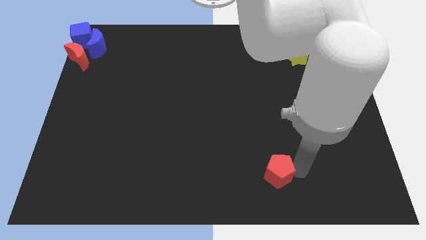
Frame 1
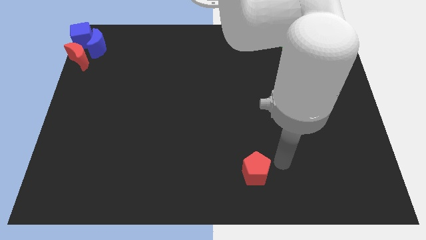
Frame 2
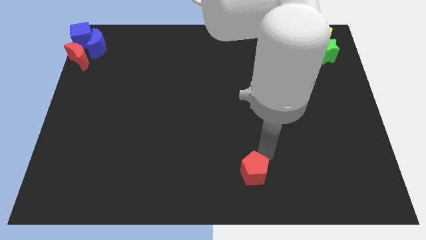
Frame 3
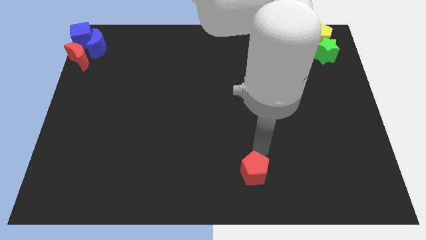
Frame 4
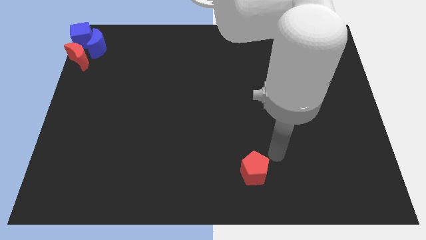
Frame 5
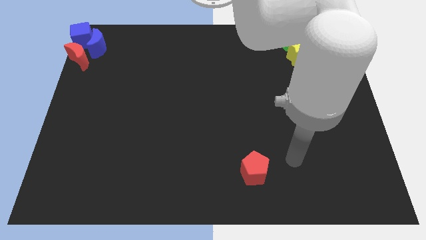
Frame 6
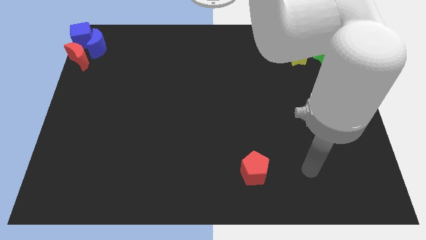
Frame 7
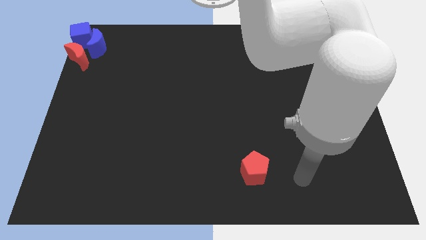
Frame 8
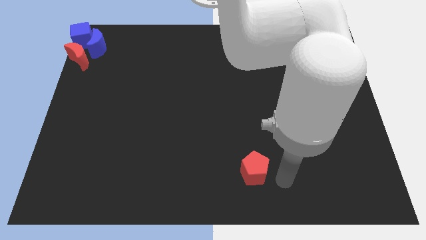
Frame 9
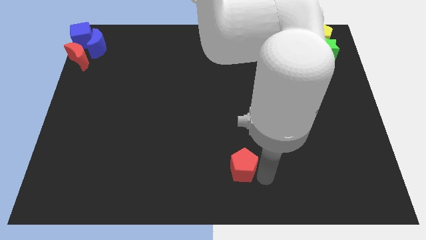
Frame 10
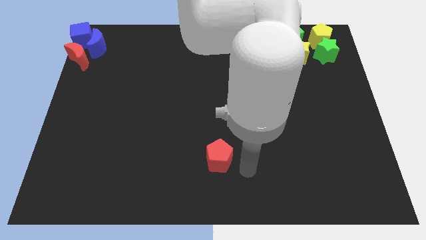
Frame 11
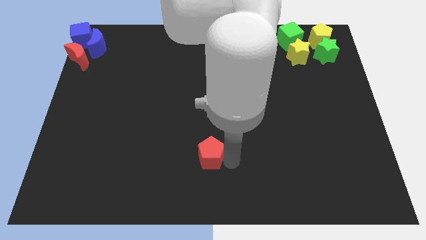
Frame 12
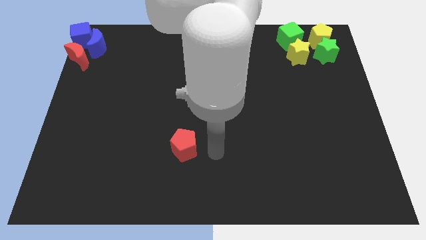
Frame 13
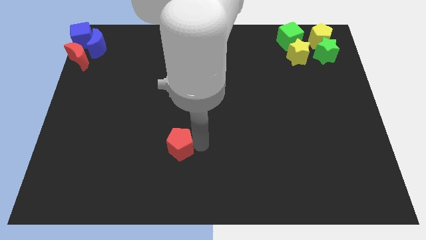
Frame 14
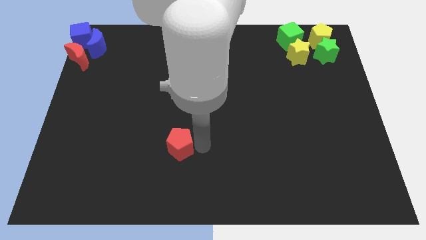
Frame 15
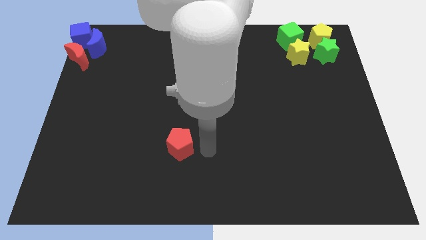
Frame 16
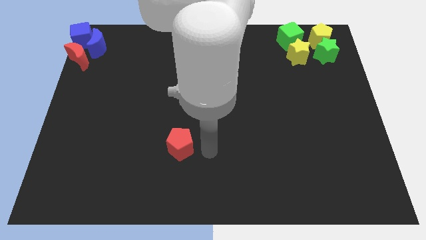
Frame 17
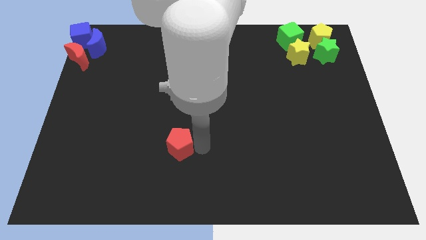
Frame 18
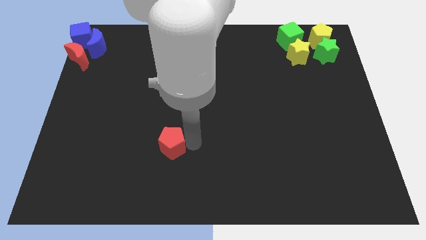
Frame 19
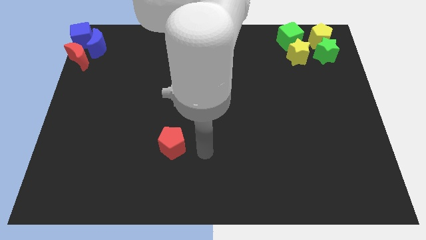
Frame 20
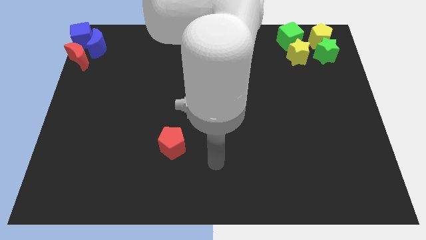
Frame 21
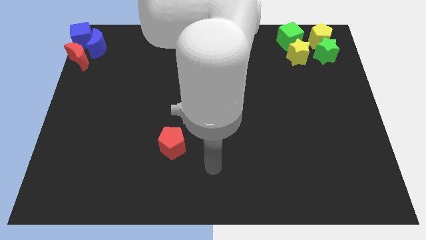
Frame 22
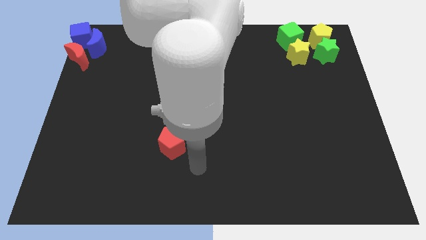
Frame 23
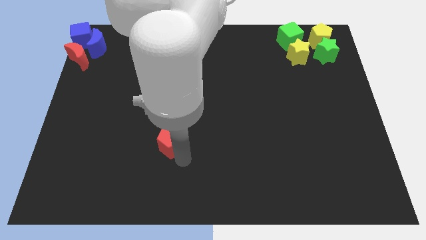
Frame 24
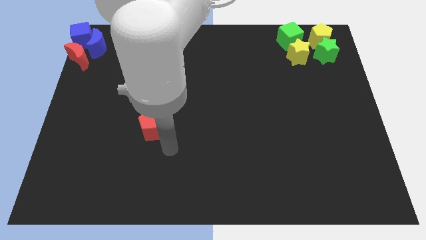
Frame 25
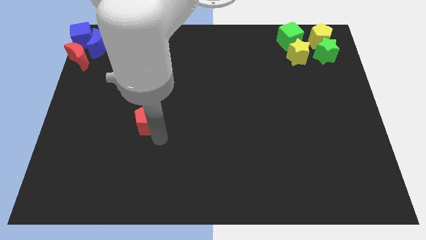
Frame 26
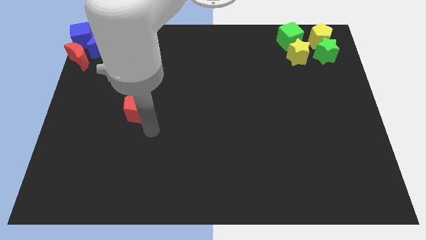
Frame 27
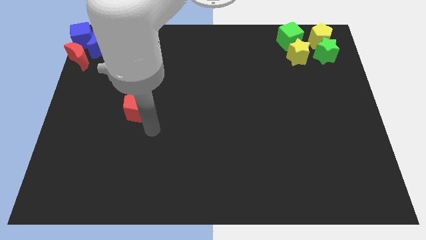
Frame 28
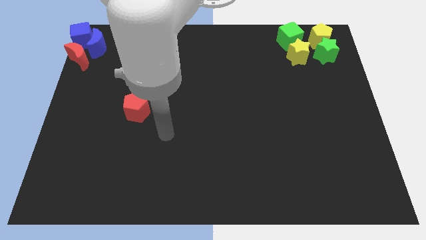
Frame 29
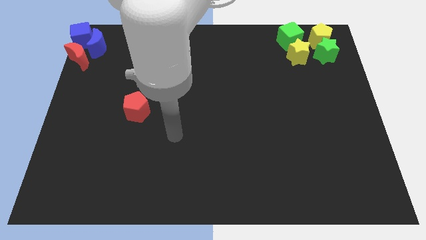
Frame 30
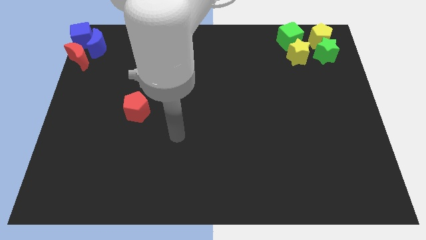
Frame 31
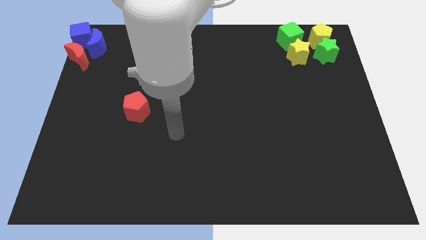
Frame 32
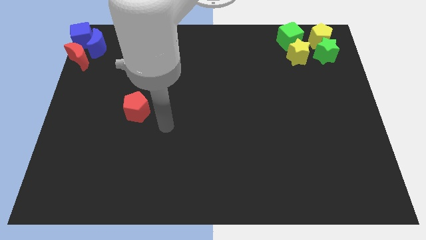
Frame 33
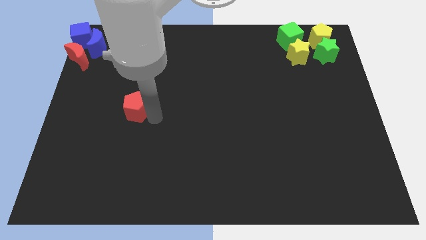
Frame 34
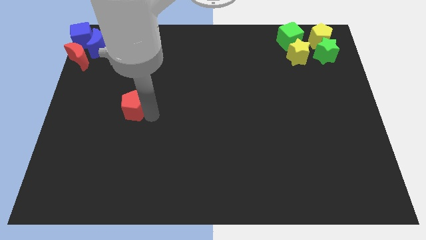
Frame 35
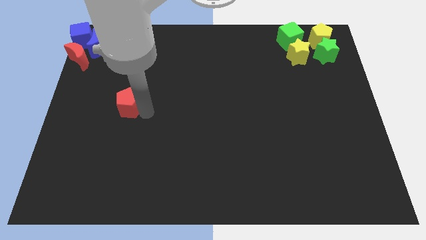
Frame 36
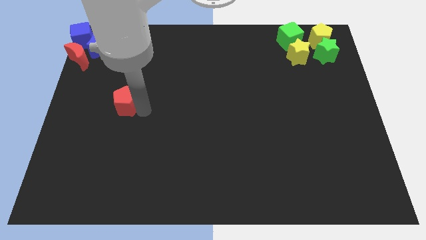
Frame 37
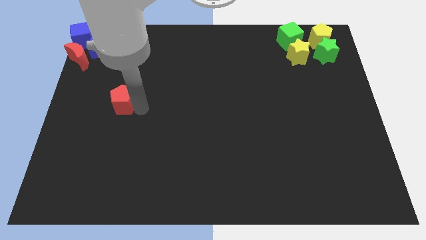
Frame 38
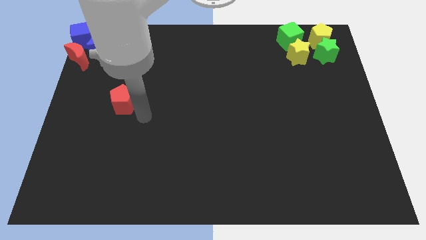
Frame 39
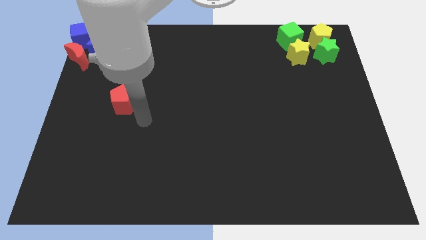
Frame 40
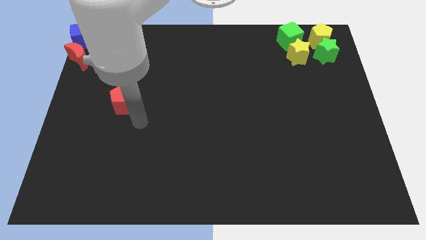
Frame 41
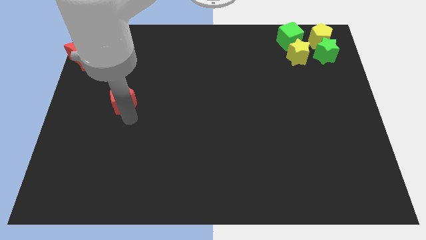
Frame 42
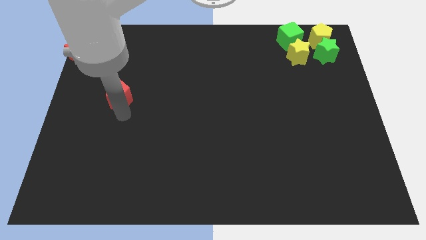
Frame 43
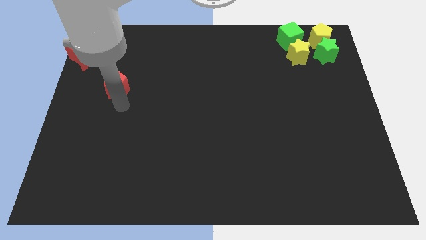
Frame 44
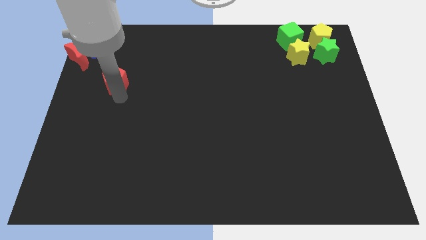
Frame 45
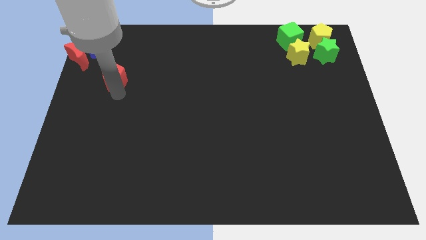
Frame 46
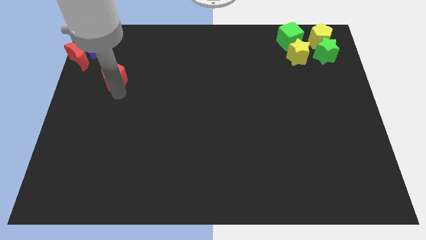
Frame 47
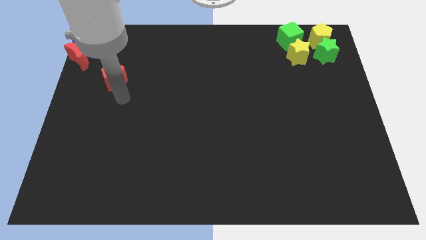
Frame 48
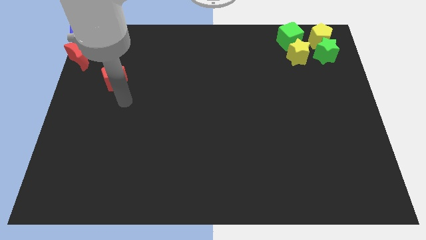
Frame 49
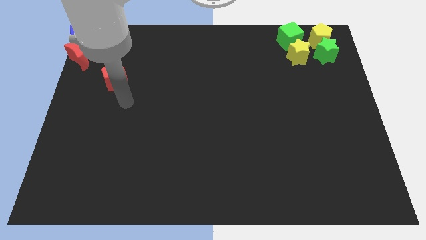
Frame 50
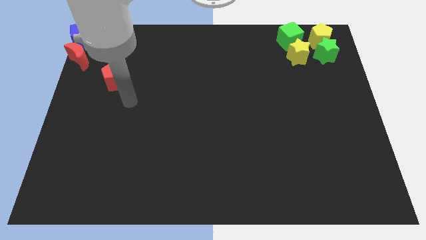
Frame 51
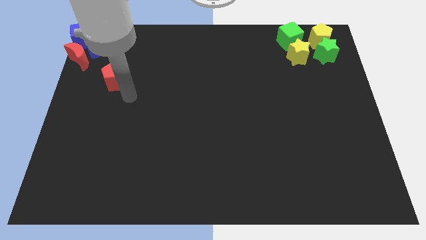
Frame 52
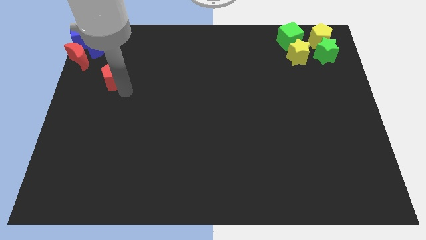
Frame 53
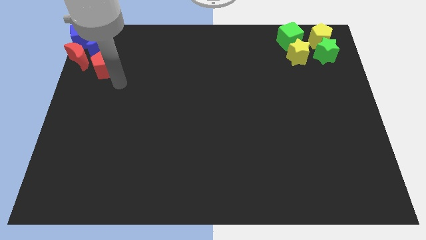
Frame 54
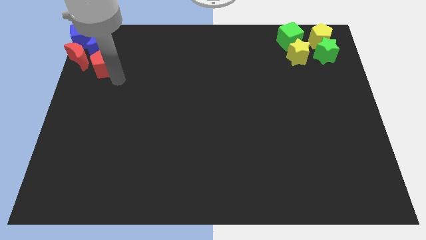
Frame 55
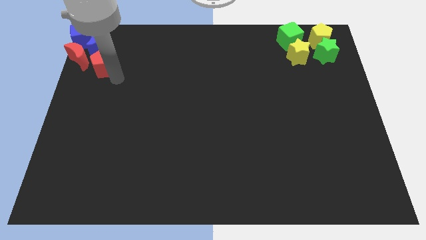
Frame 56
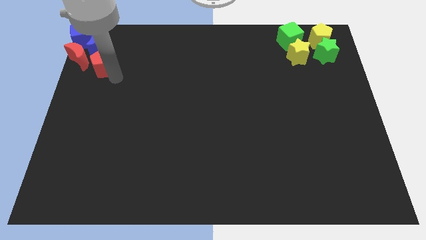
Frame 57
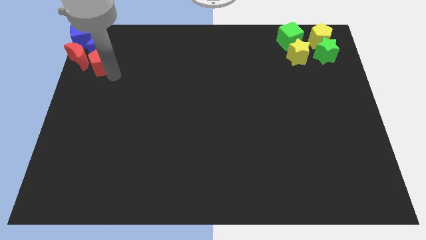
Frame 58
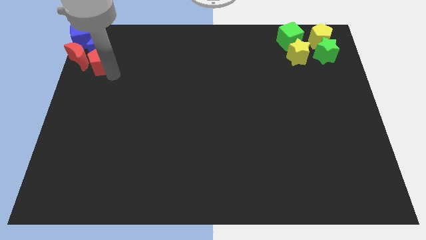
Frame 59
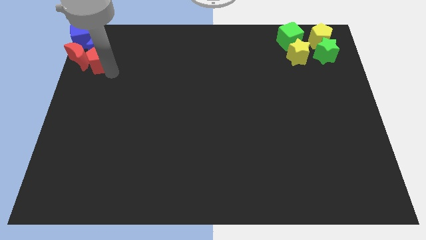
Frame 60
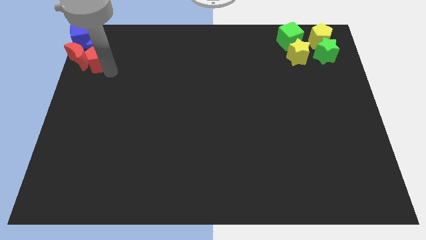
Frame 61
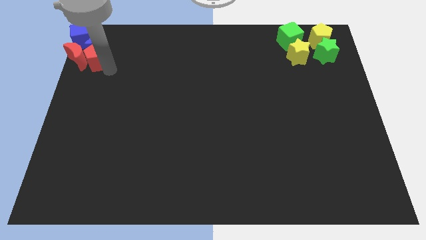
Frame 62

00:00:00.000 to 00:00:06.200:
place the red pentagon below the blue crescent

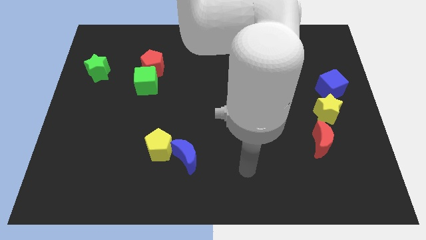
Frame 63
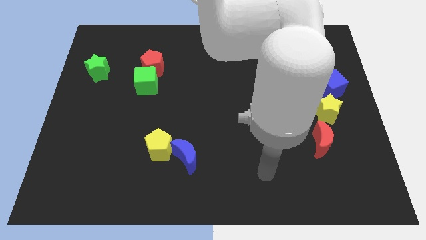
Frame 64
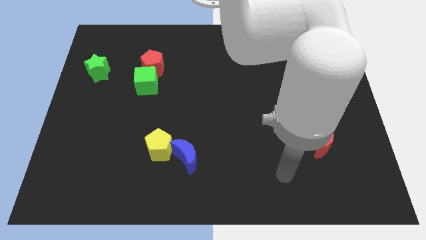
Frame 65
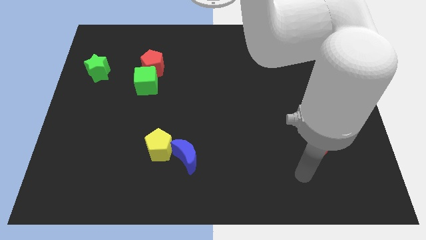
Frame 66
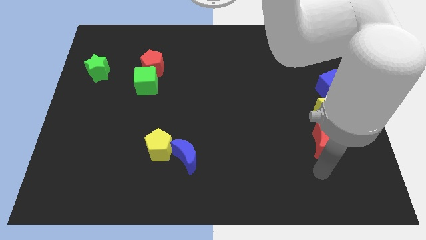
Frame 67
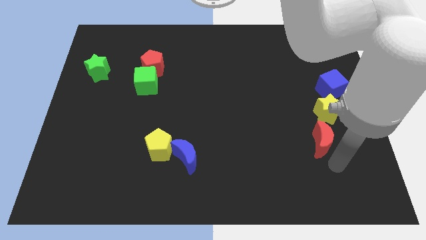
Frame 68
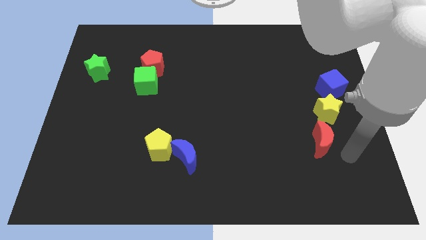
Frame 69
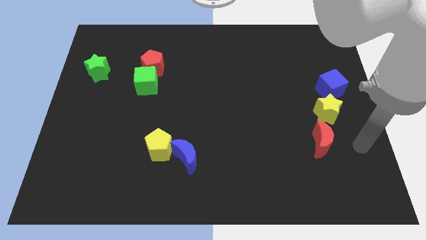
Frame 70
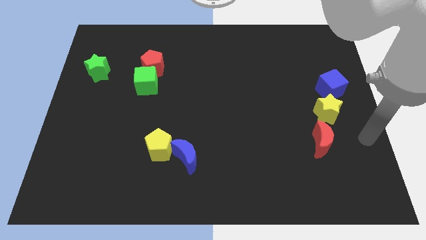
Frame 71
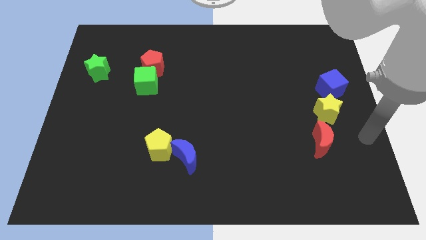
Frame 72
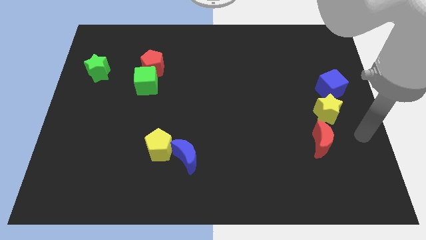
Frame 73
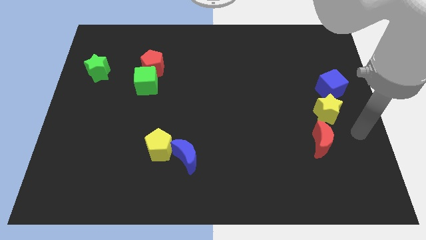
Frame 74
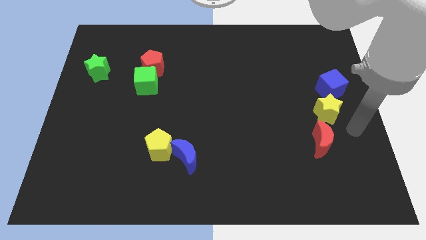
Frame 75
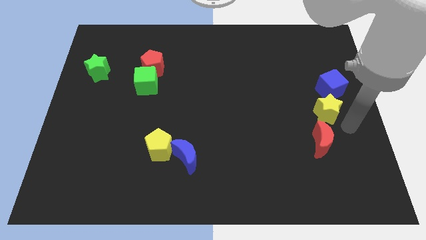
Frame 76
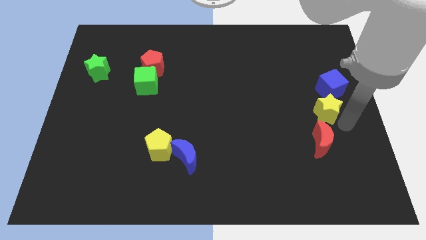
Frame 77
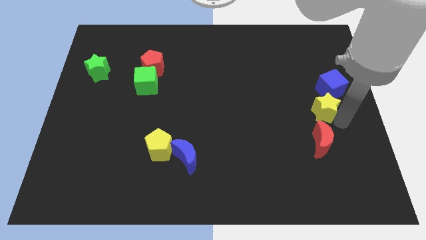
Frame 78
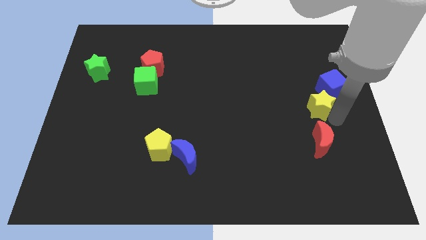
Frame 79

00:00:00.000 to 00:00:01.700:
move arm right beside the yellow star

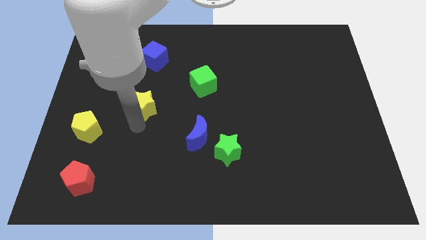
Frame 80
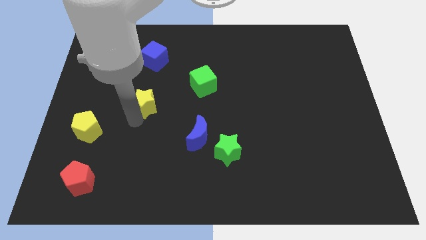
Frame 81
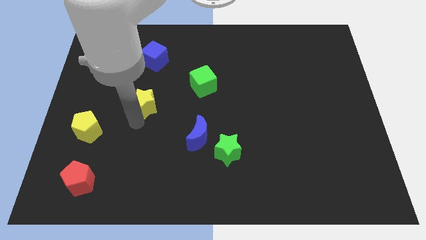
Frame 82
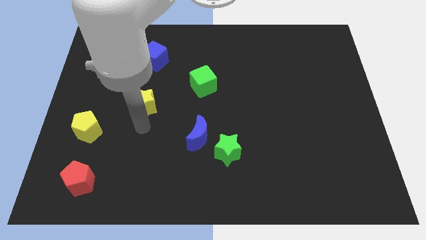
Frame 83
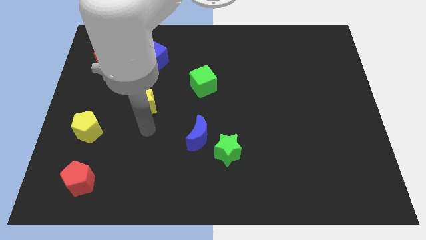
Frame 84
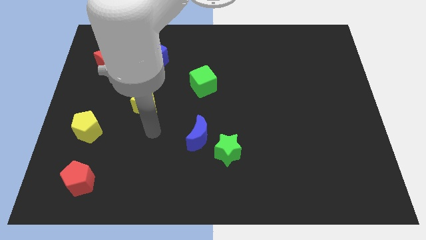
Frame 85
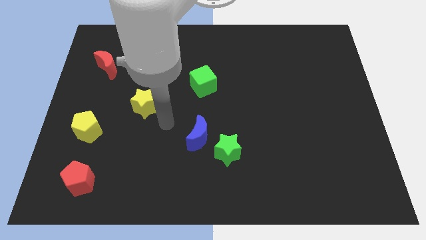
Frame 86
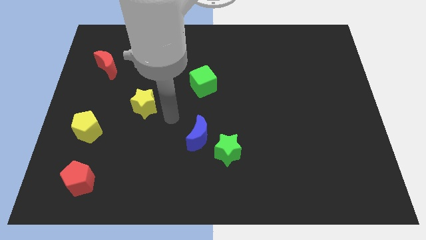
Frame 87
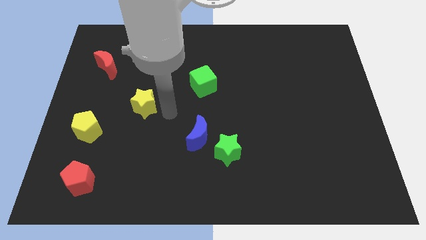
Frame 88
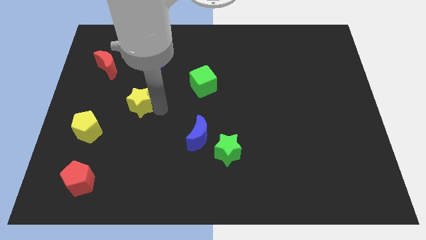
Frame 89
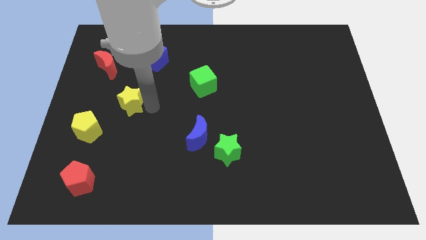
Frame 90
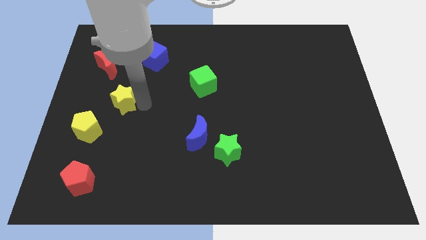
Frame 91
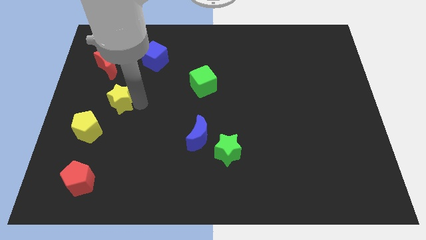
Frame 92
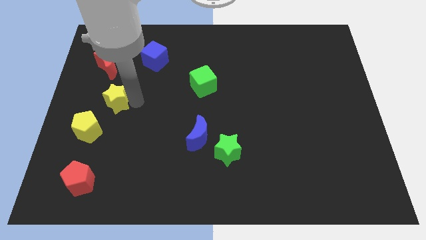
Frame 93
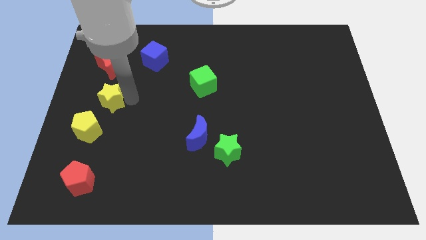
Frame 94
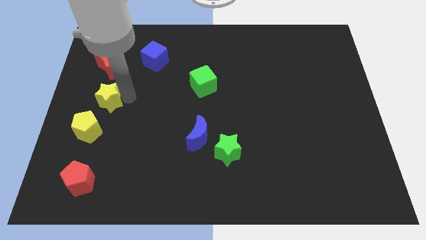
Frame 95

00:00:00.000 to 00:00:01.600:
move the yellow star diagonally top right to yellow pentagon
